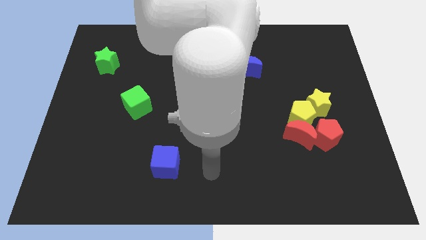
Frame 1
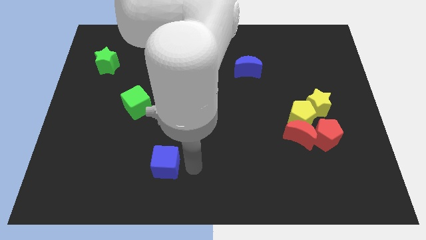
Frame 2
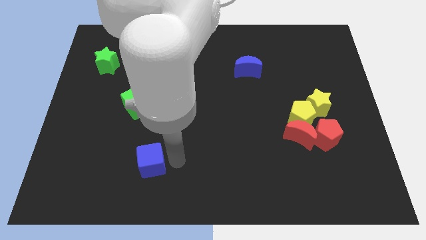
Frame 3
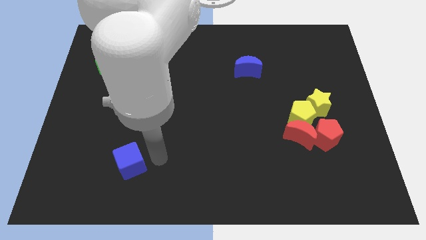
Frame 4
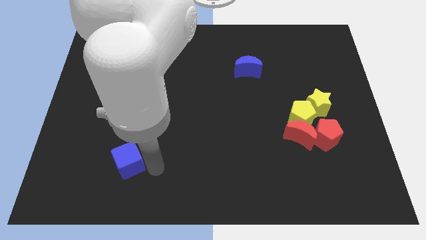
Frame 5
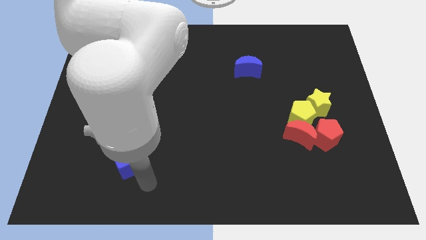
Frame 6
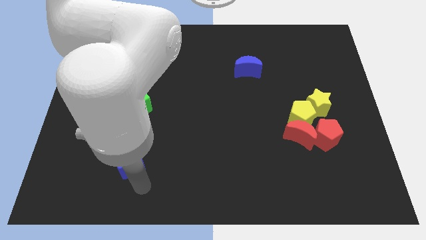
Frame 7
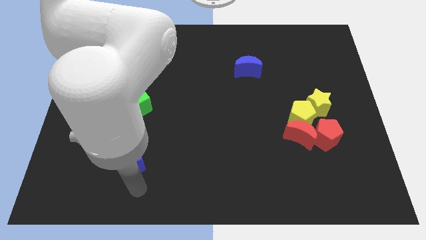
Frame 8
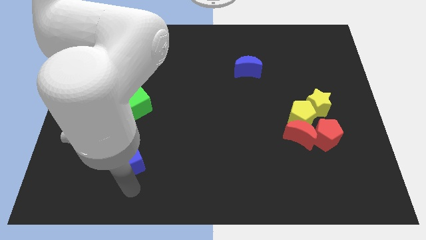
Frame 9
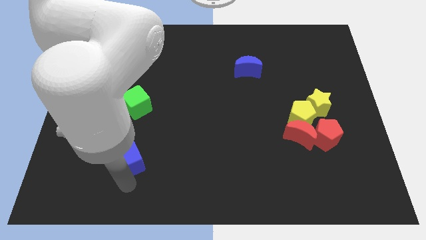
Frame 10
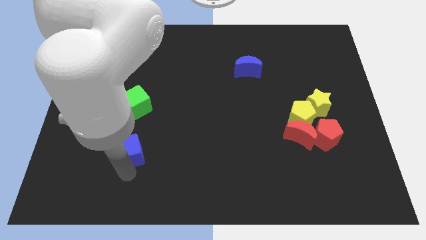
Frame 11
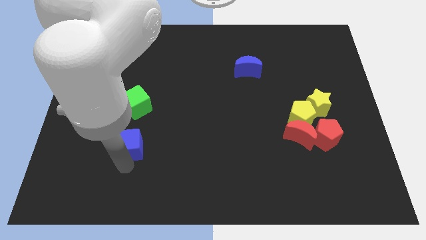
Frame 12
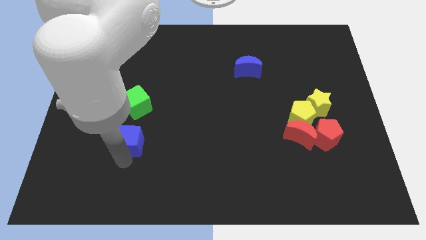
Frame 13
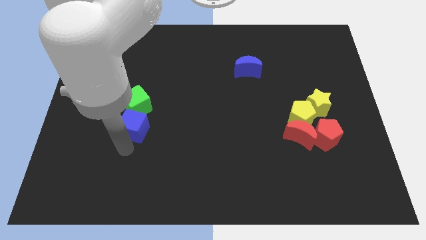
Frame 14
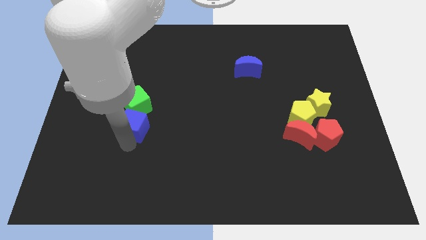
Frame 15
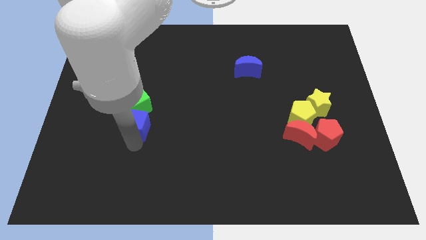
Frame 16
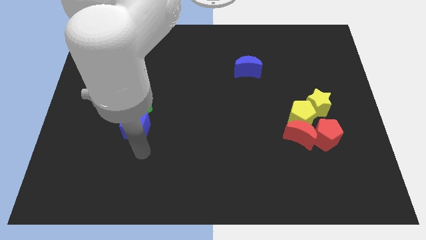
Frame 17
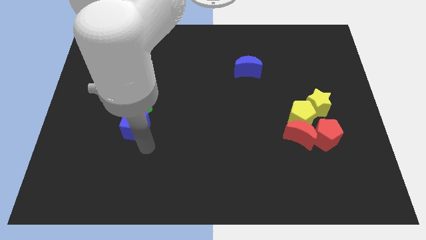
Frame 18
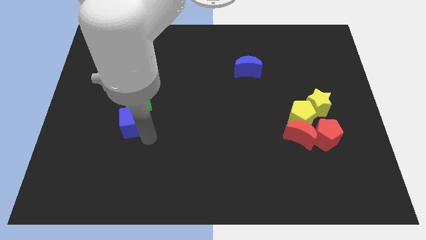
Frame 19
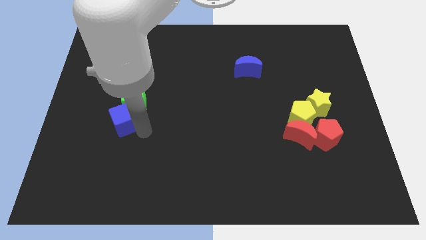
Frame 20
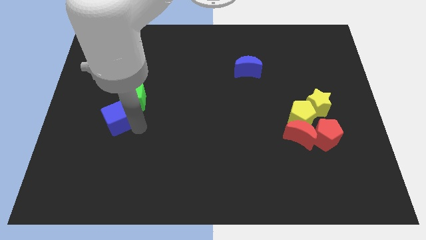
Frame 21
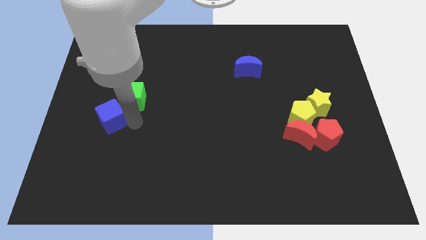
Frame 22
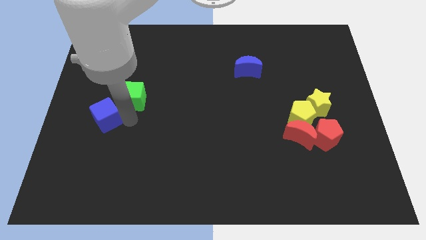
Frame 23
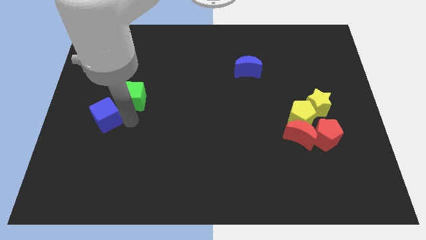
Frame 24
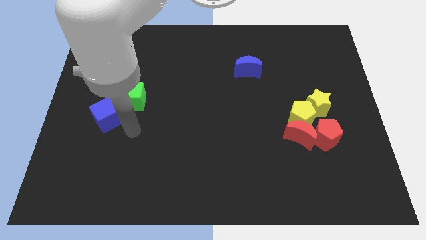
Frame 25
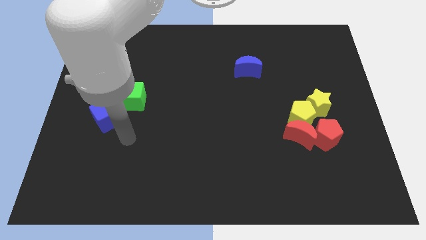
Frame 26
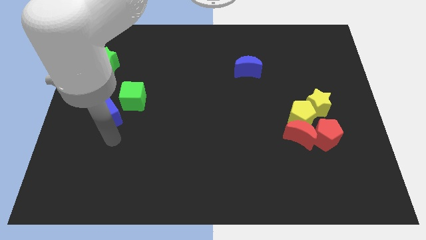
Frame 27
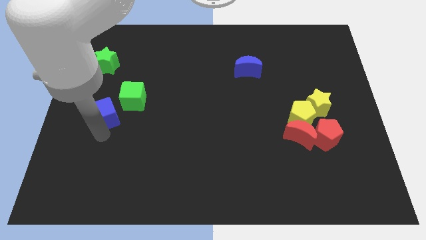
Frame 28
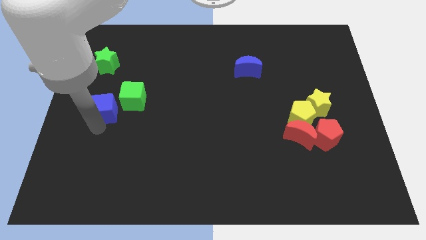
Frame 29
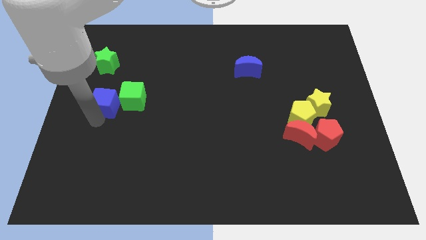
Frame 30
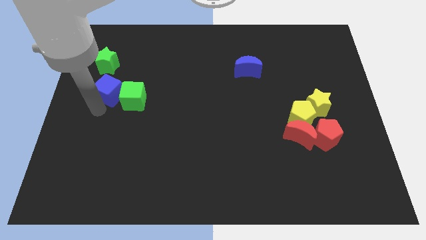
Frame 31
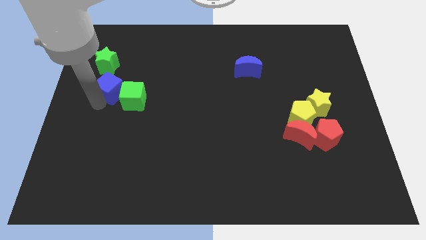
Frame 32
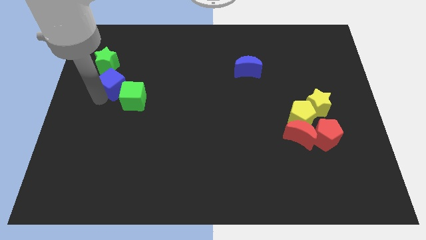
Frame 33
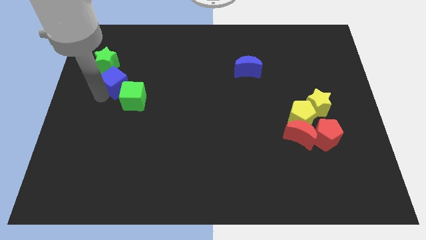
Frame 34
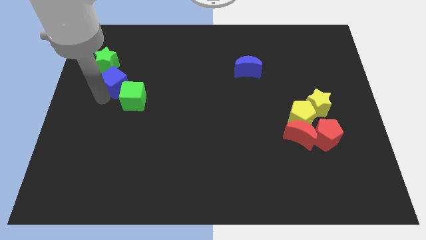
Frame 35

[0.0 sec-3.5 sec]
push the blue cube between the green star and green cube

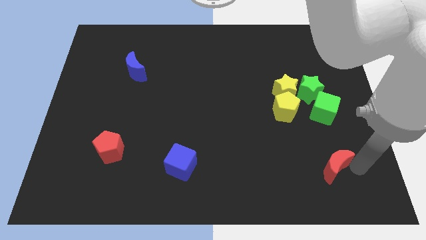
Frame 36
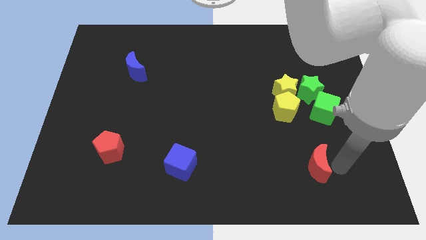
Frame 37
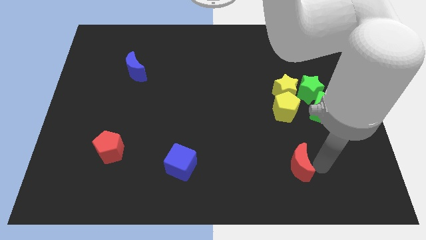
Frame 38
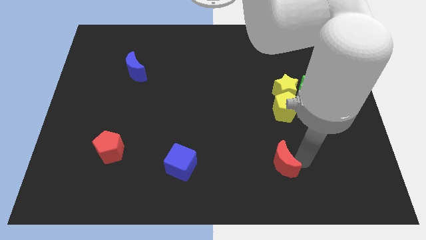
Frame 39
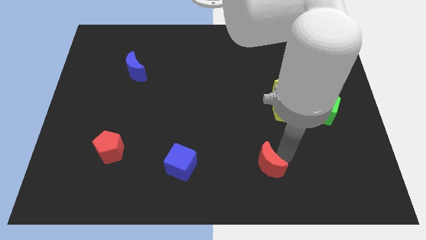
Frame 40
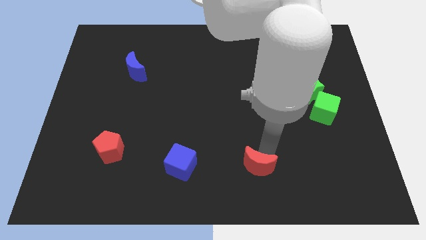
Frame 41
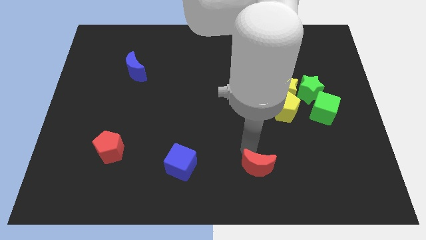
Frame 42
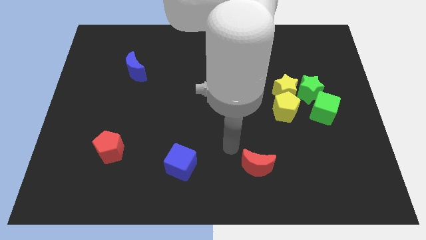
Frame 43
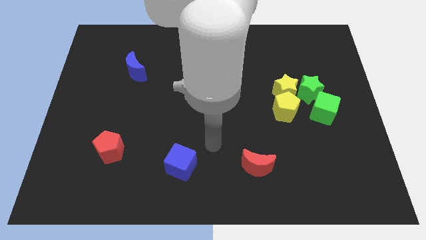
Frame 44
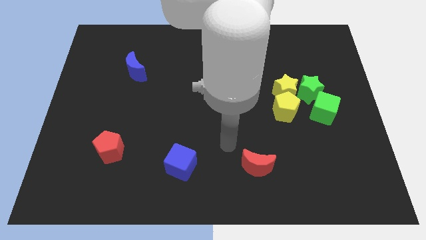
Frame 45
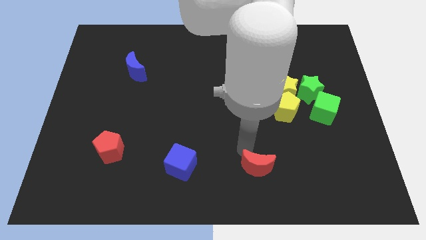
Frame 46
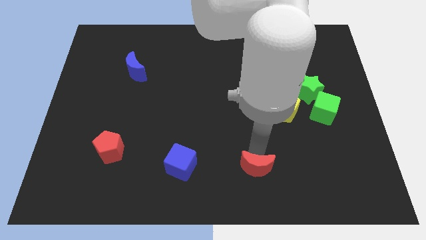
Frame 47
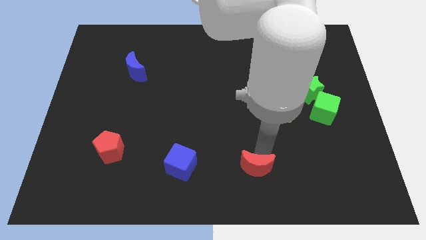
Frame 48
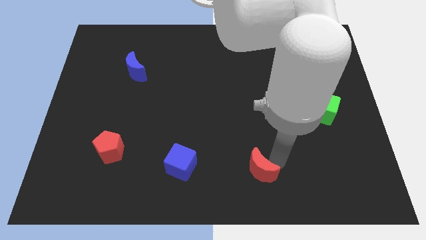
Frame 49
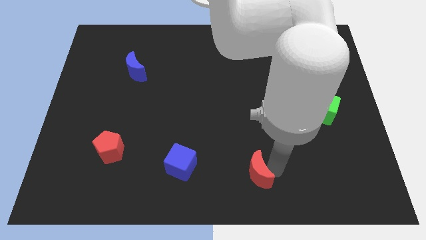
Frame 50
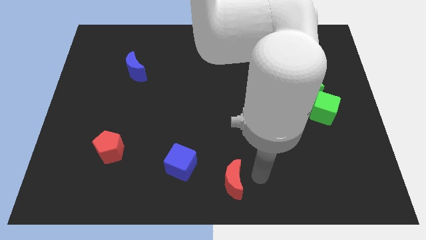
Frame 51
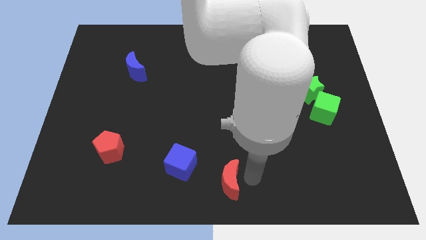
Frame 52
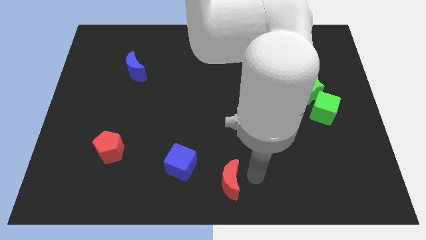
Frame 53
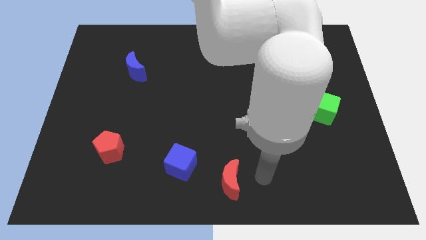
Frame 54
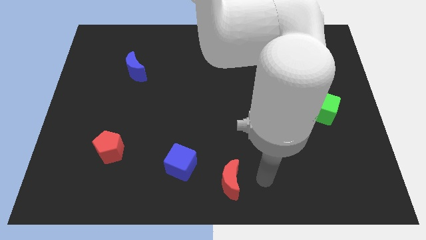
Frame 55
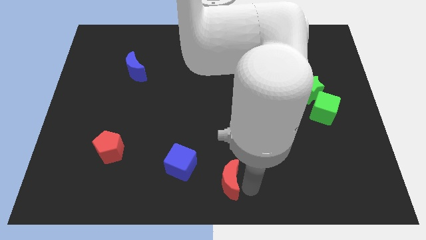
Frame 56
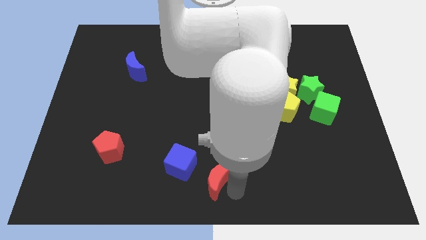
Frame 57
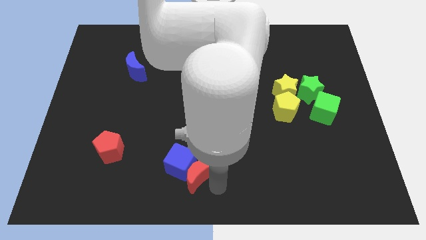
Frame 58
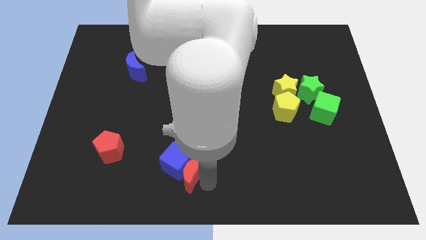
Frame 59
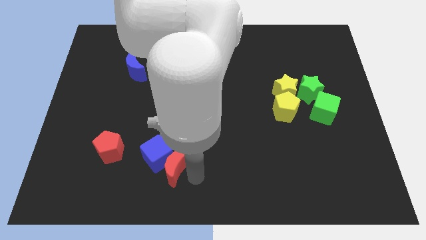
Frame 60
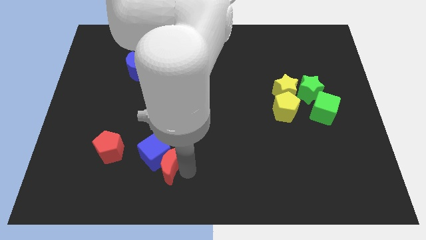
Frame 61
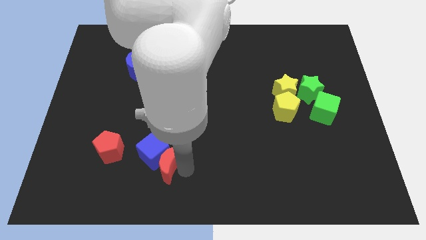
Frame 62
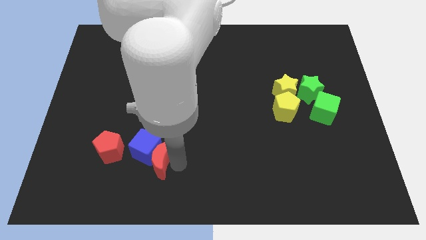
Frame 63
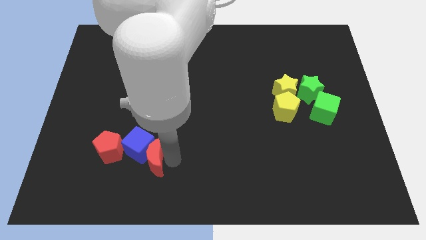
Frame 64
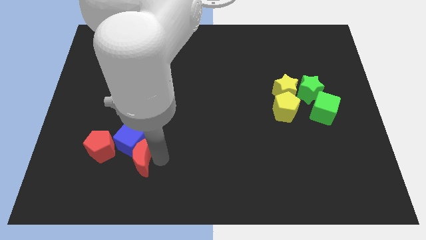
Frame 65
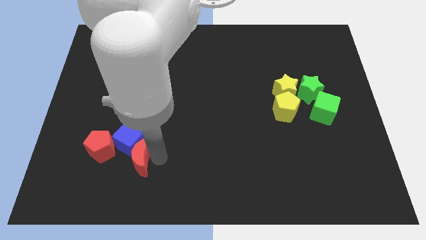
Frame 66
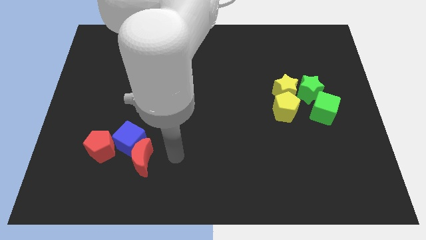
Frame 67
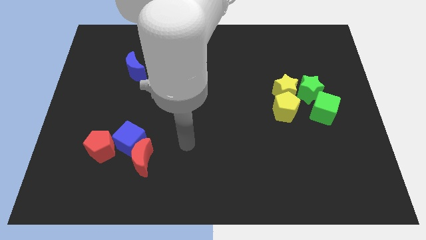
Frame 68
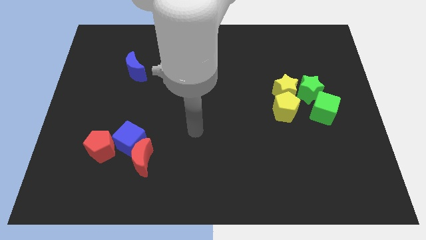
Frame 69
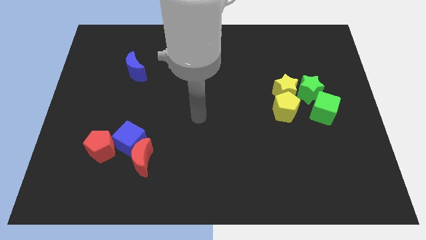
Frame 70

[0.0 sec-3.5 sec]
push the red crescent along with blue cube into the red pentagon

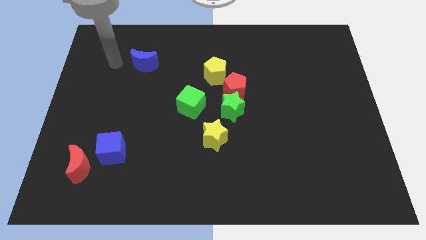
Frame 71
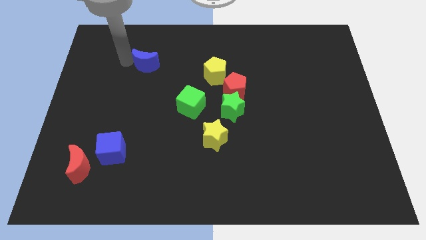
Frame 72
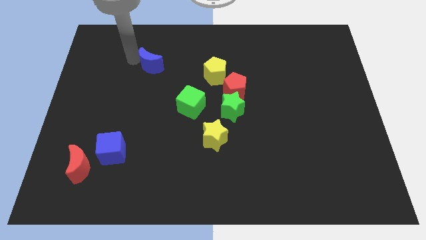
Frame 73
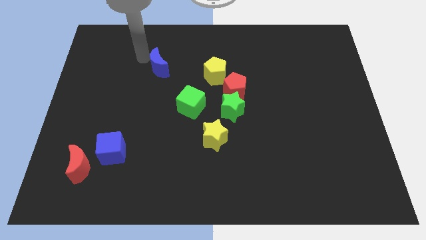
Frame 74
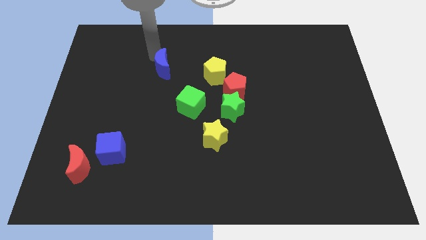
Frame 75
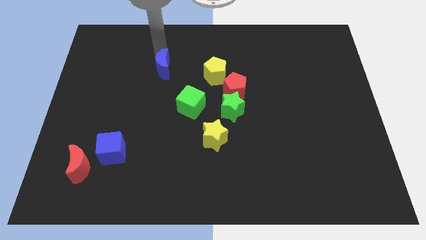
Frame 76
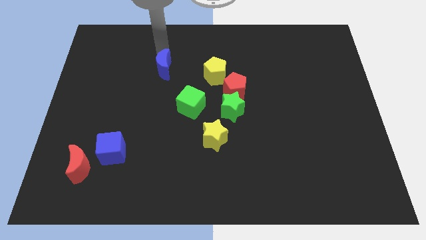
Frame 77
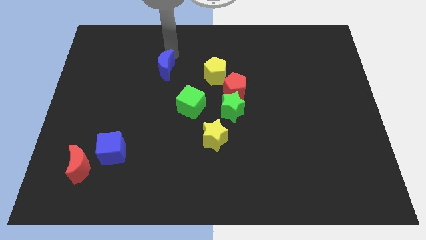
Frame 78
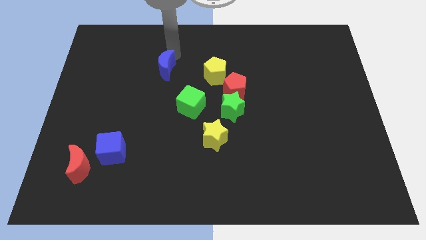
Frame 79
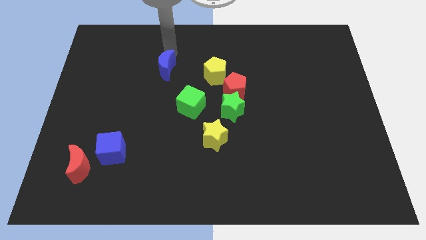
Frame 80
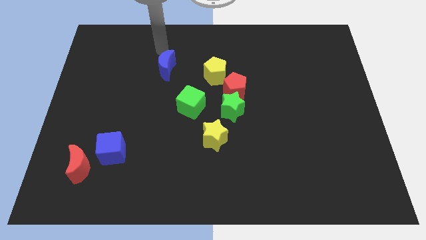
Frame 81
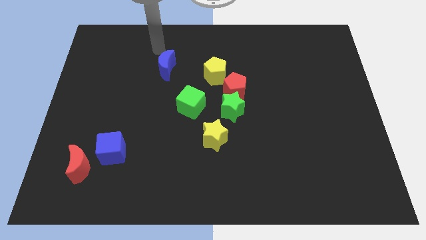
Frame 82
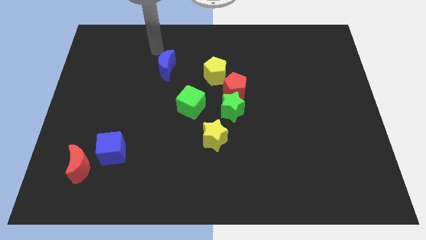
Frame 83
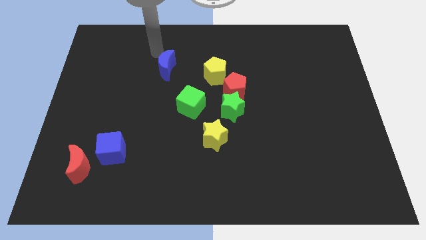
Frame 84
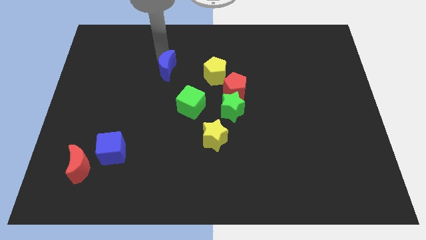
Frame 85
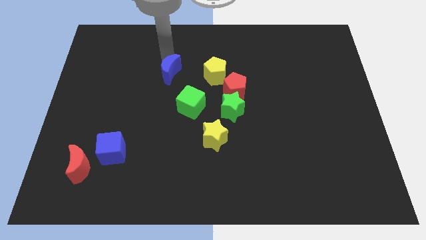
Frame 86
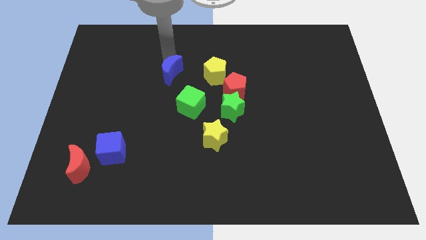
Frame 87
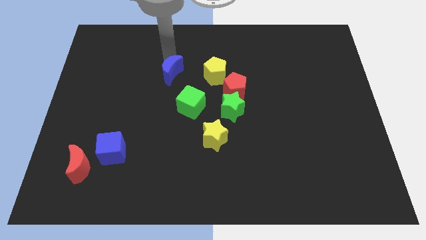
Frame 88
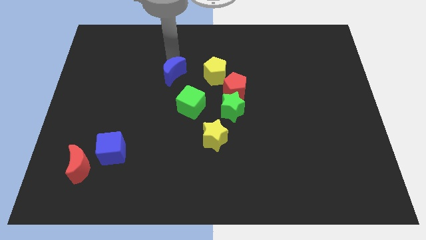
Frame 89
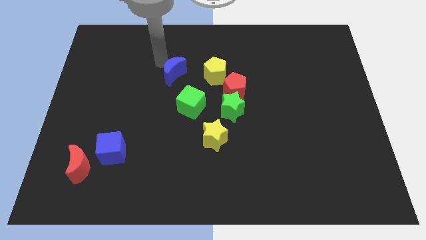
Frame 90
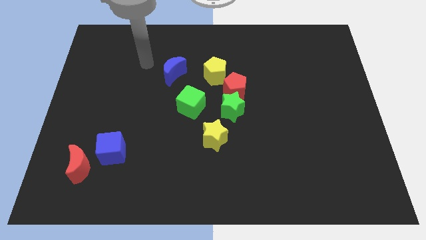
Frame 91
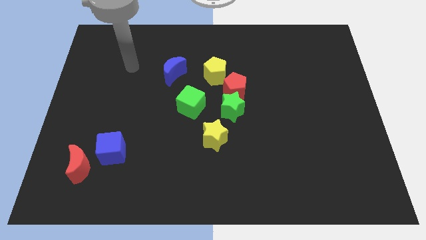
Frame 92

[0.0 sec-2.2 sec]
put the blue moon left to the yellow pentagon
